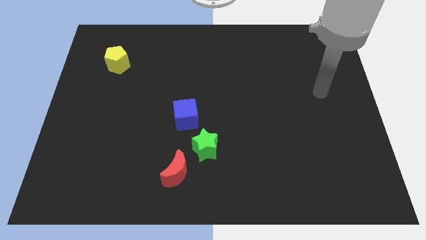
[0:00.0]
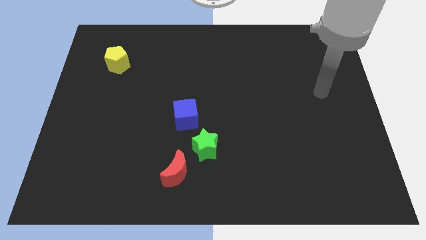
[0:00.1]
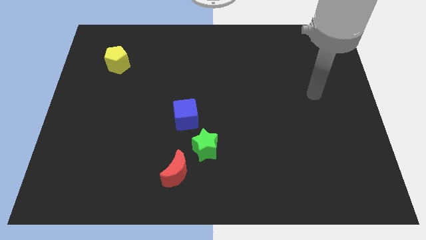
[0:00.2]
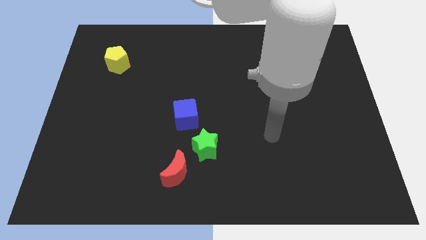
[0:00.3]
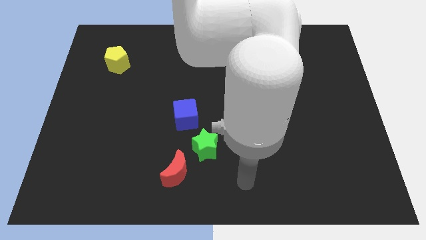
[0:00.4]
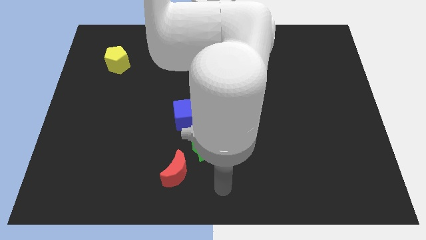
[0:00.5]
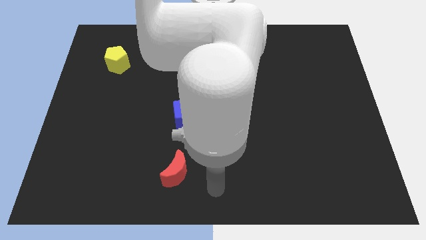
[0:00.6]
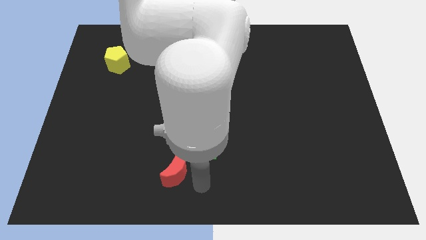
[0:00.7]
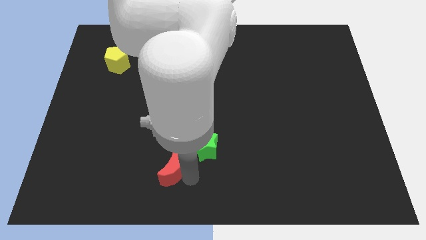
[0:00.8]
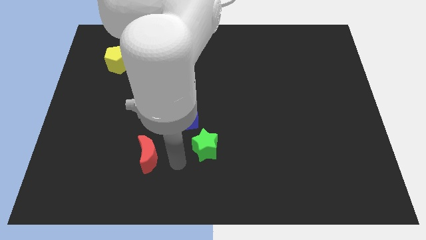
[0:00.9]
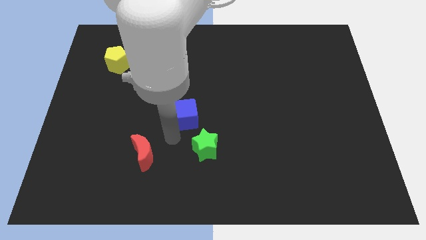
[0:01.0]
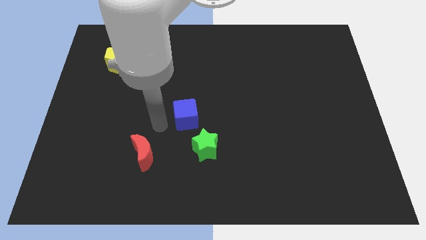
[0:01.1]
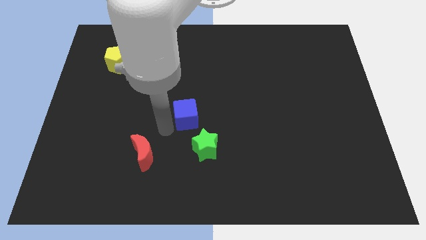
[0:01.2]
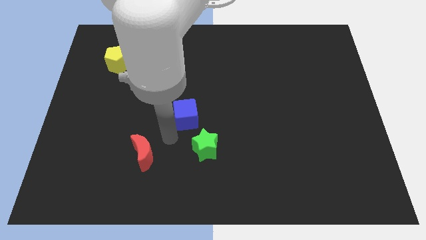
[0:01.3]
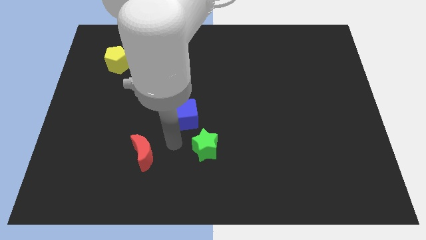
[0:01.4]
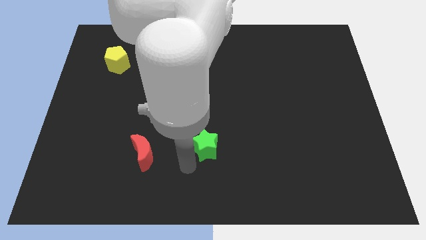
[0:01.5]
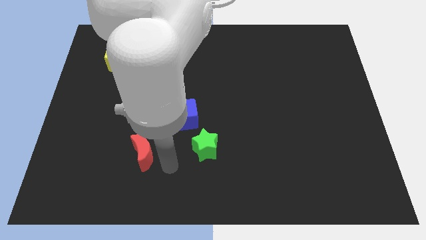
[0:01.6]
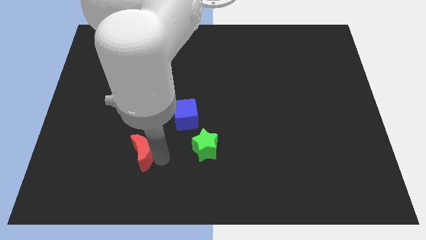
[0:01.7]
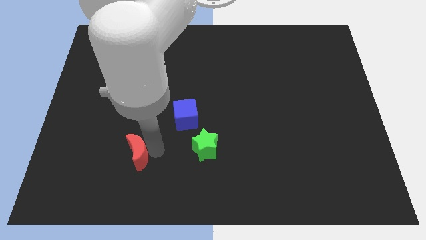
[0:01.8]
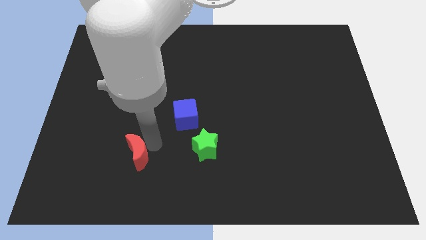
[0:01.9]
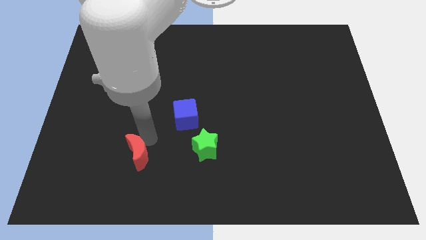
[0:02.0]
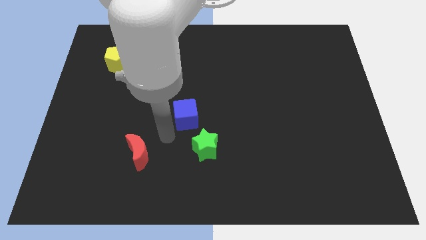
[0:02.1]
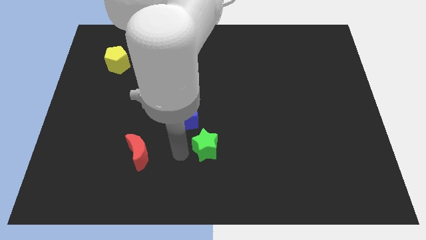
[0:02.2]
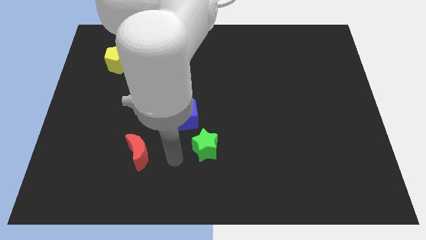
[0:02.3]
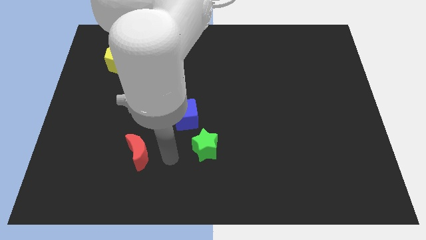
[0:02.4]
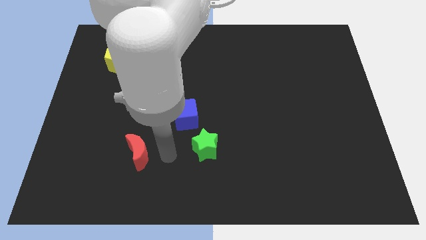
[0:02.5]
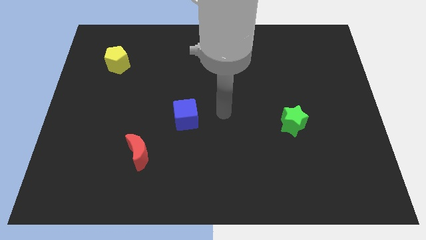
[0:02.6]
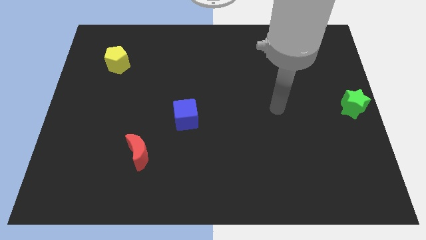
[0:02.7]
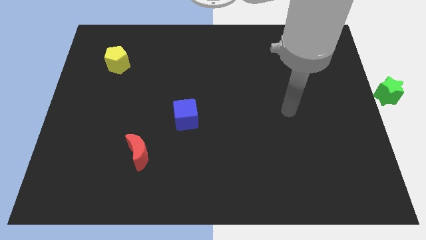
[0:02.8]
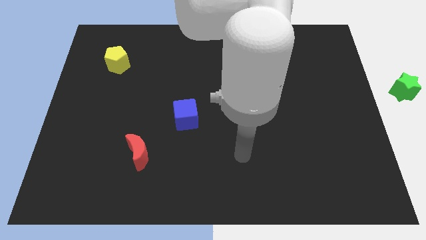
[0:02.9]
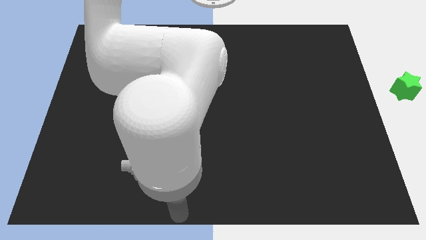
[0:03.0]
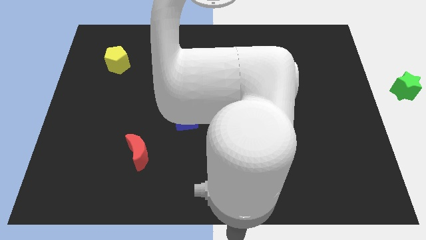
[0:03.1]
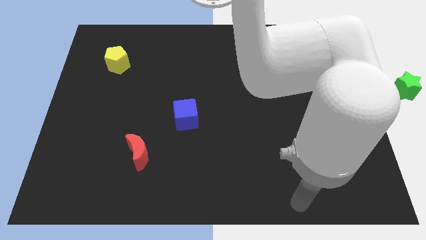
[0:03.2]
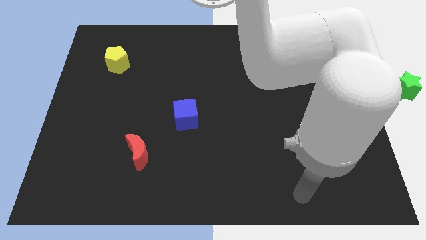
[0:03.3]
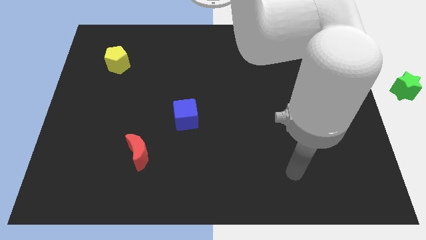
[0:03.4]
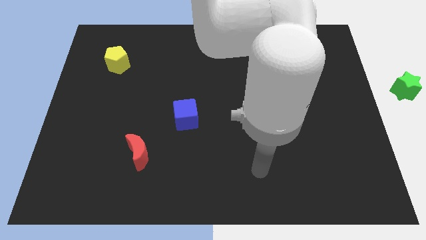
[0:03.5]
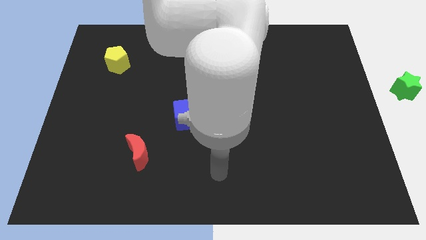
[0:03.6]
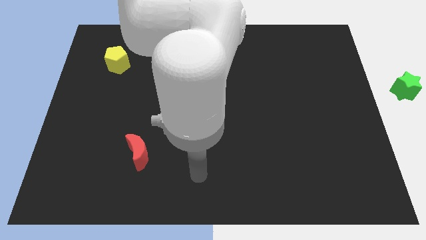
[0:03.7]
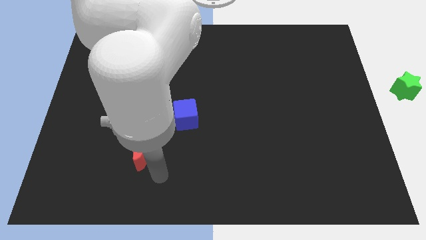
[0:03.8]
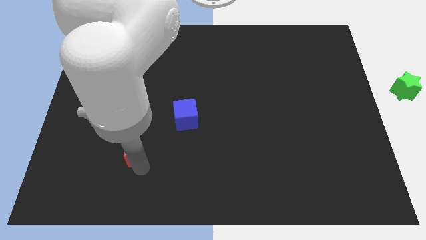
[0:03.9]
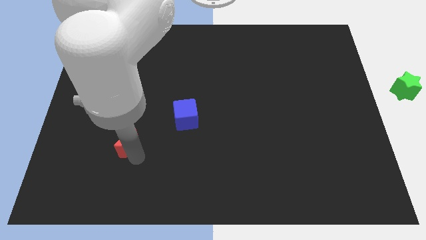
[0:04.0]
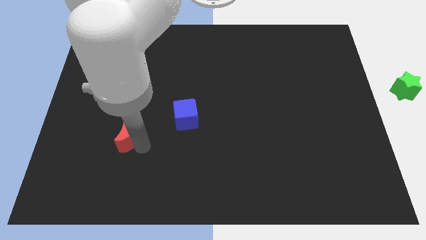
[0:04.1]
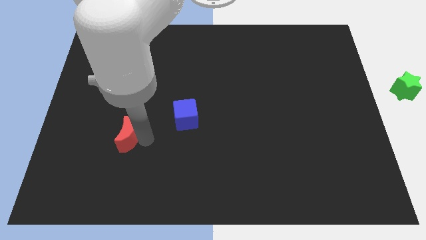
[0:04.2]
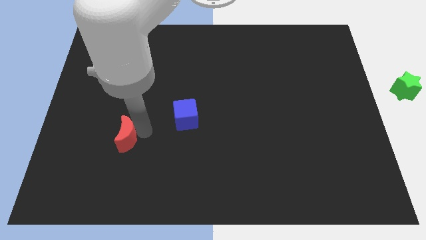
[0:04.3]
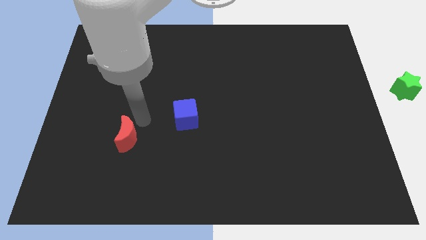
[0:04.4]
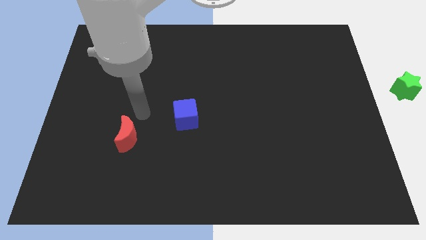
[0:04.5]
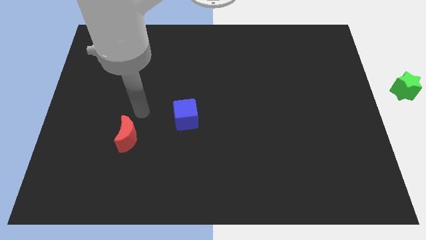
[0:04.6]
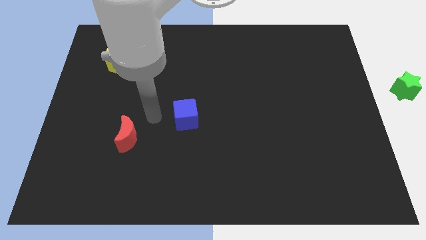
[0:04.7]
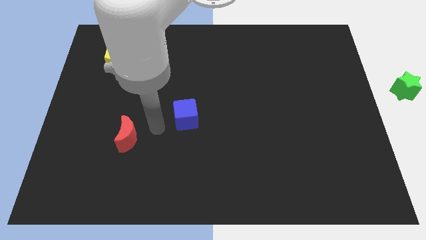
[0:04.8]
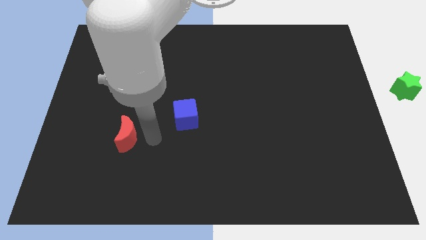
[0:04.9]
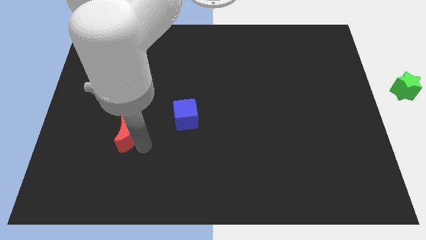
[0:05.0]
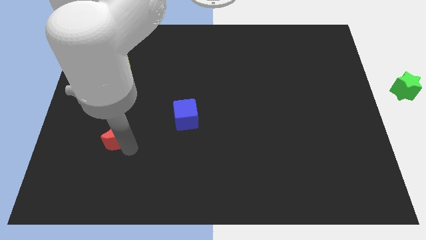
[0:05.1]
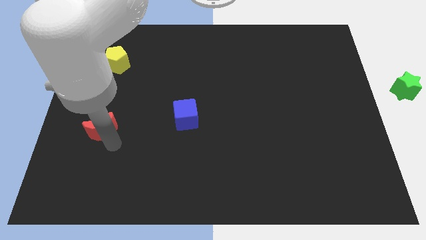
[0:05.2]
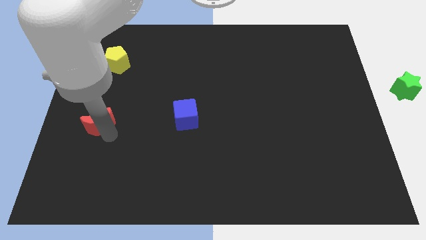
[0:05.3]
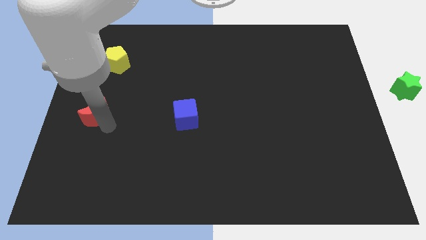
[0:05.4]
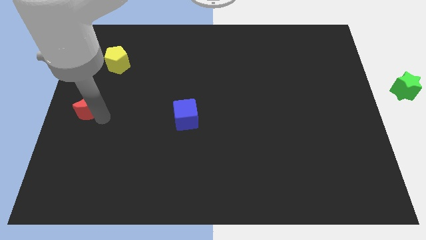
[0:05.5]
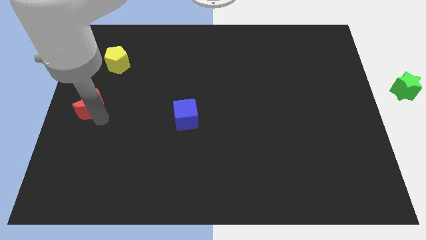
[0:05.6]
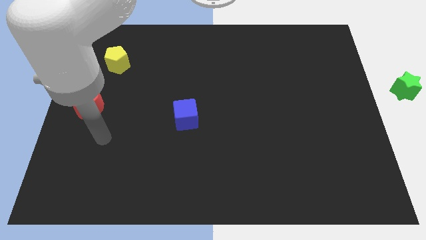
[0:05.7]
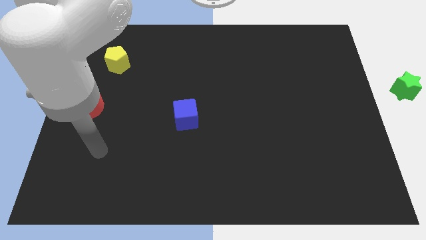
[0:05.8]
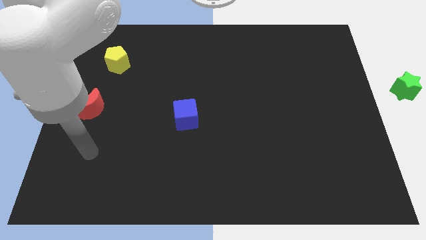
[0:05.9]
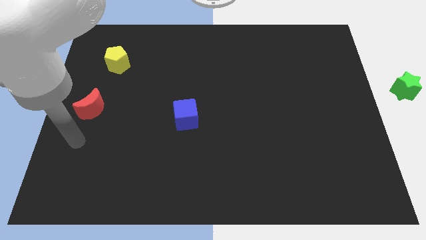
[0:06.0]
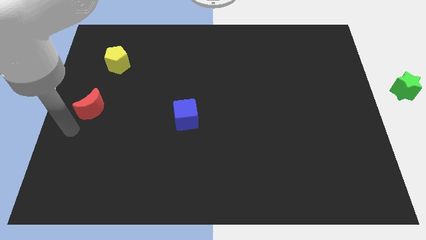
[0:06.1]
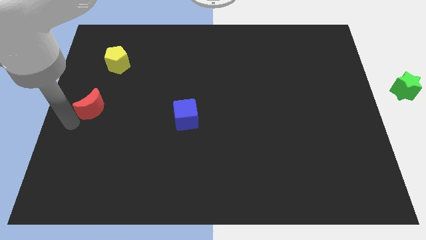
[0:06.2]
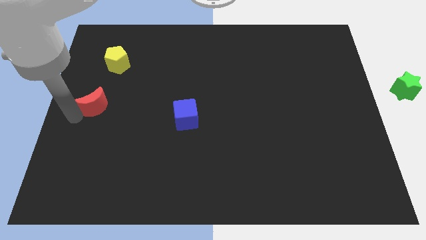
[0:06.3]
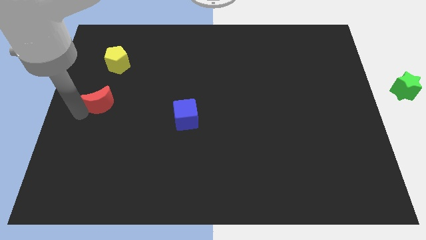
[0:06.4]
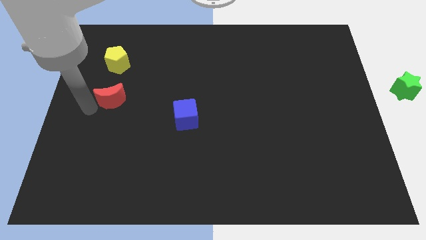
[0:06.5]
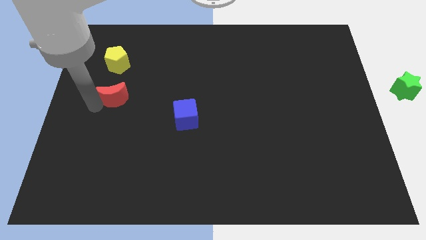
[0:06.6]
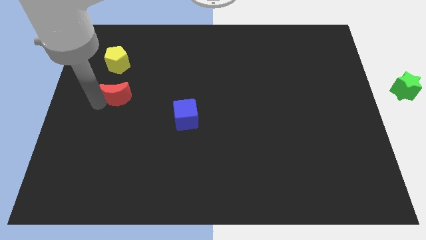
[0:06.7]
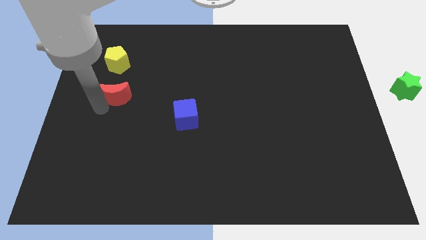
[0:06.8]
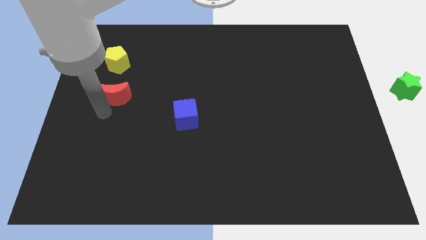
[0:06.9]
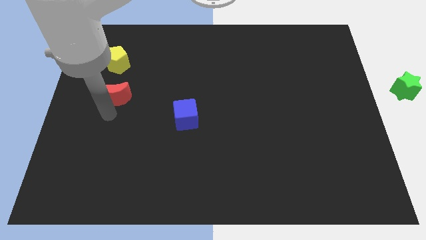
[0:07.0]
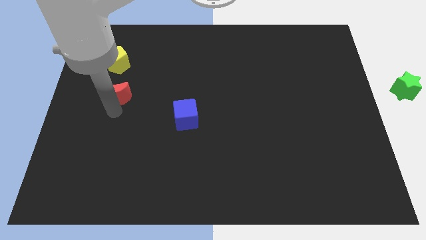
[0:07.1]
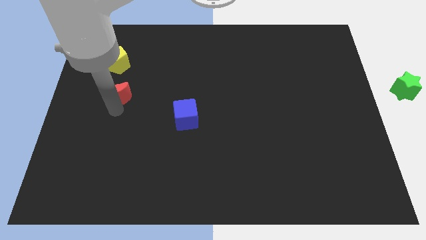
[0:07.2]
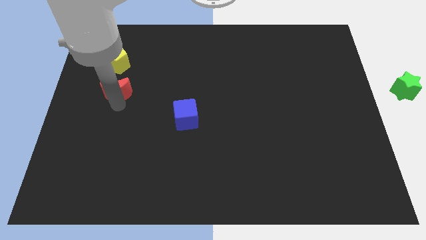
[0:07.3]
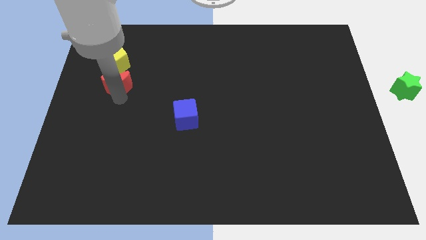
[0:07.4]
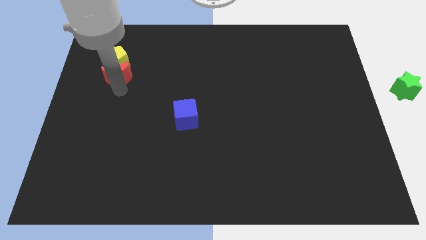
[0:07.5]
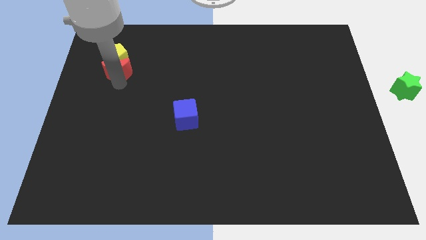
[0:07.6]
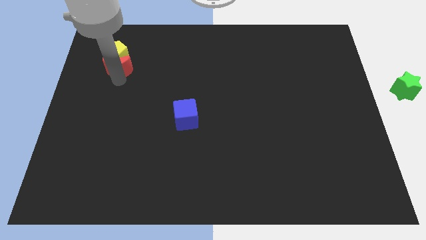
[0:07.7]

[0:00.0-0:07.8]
put the red moon next to the yellow block

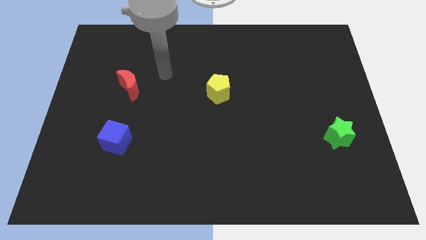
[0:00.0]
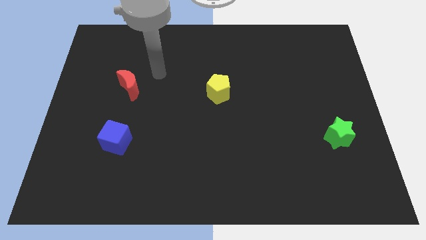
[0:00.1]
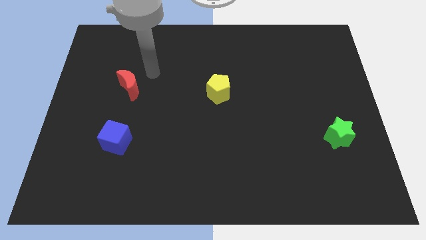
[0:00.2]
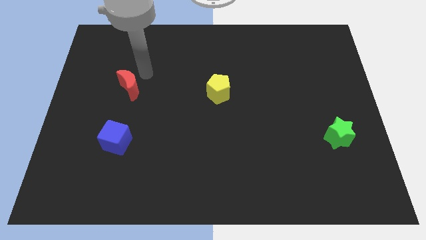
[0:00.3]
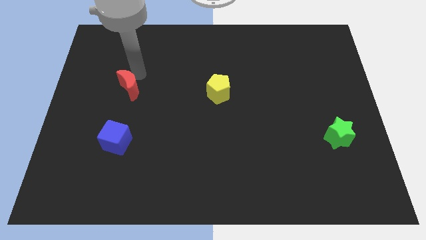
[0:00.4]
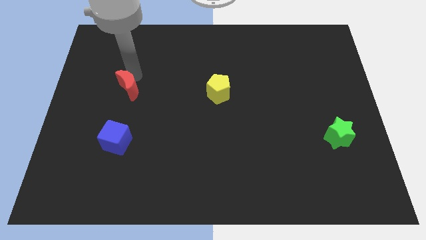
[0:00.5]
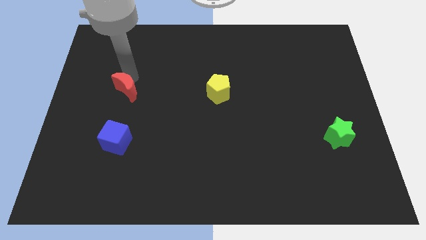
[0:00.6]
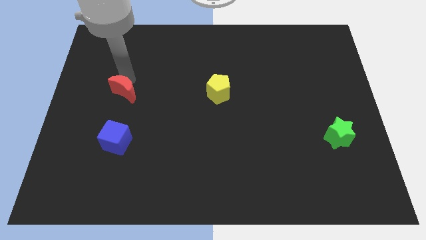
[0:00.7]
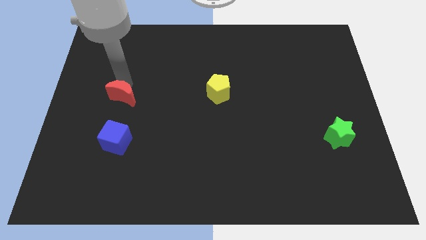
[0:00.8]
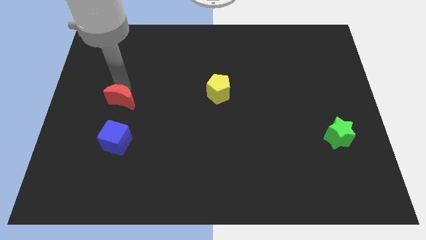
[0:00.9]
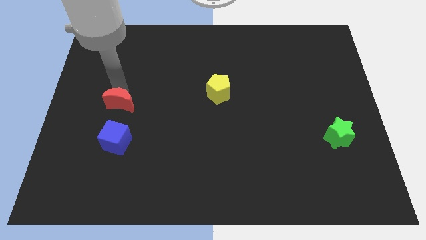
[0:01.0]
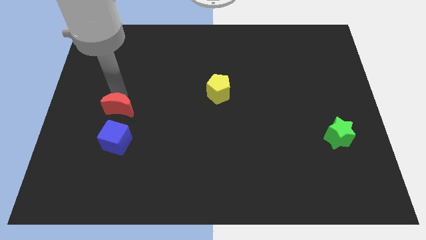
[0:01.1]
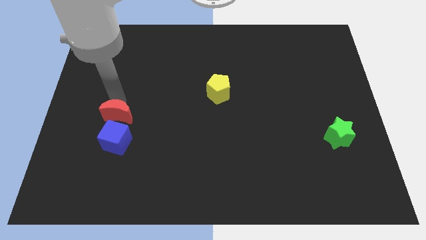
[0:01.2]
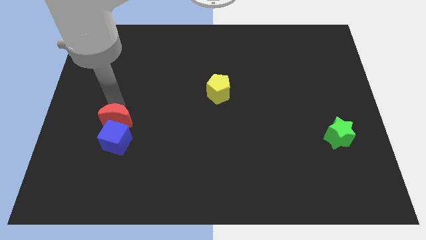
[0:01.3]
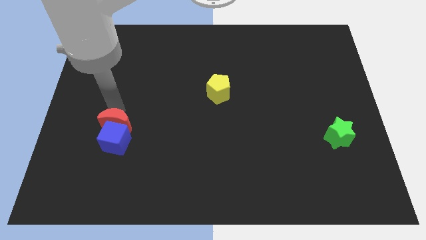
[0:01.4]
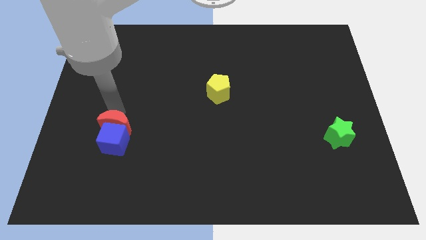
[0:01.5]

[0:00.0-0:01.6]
put the moon close to the blue cube
